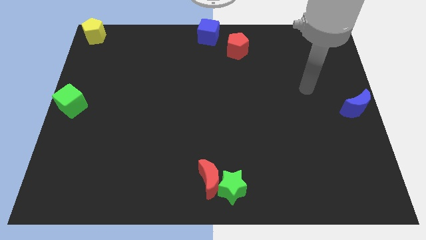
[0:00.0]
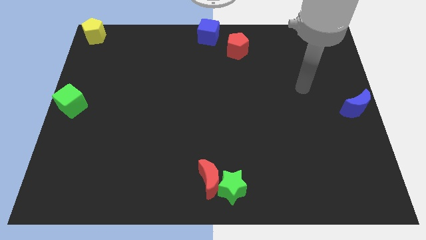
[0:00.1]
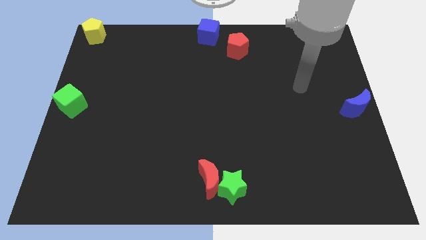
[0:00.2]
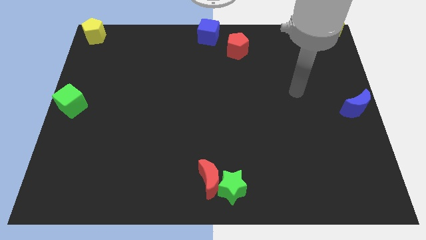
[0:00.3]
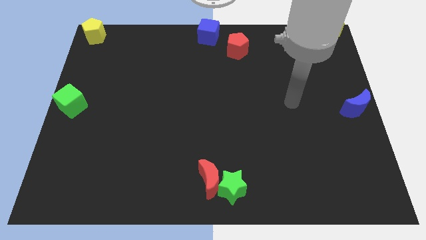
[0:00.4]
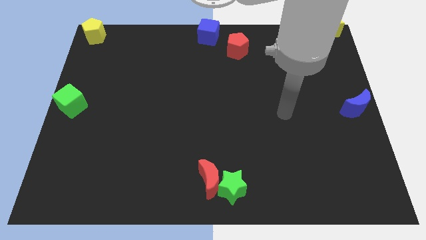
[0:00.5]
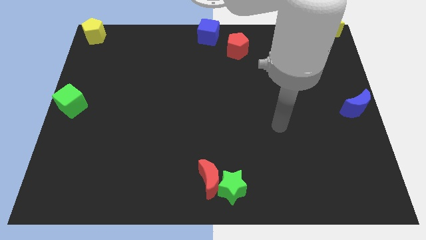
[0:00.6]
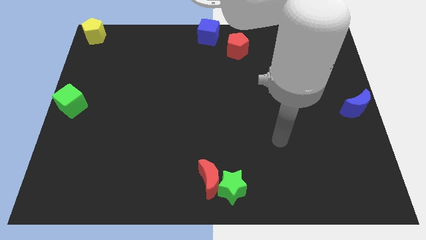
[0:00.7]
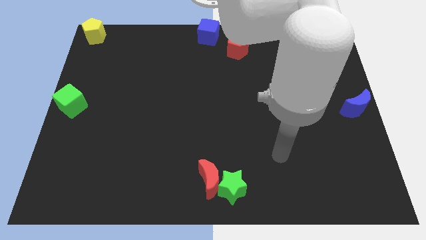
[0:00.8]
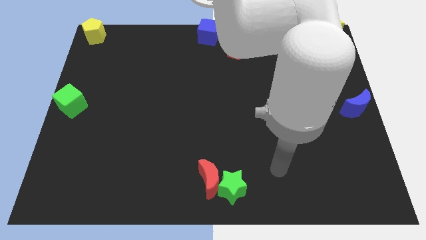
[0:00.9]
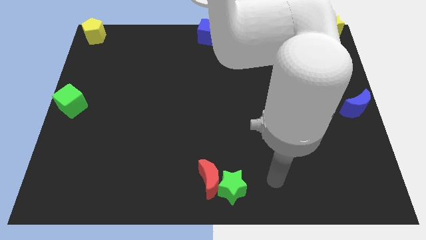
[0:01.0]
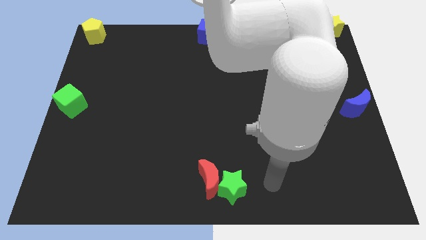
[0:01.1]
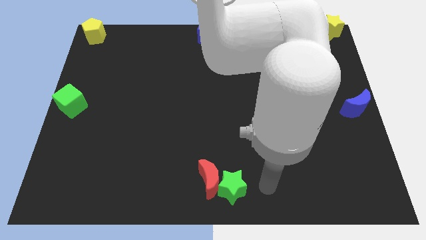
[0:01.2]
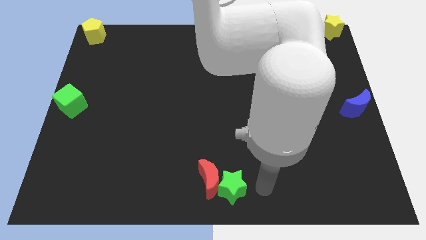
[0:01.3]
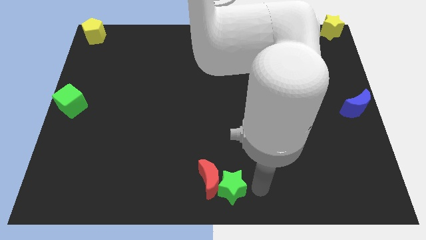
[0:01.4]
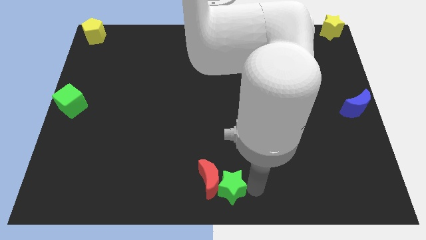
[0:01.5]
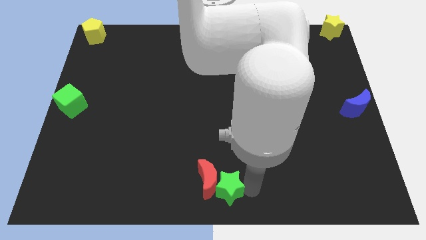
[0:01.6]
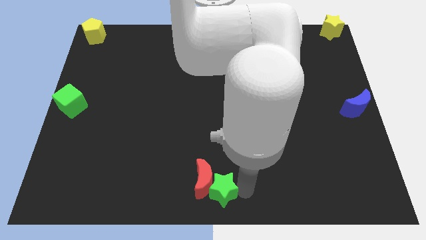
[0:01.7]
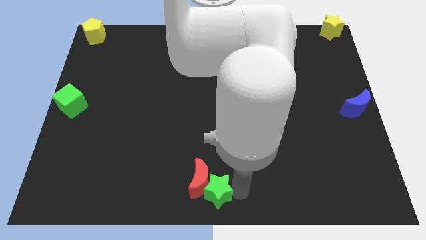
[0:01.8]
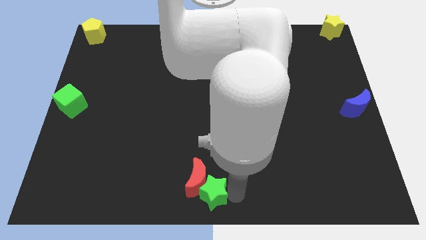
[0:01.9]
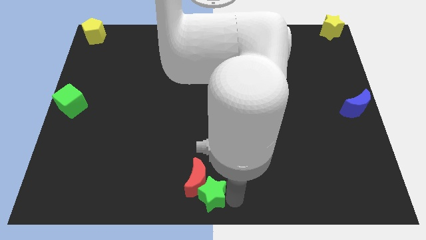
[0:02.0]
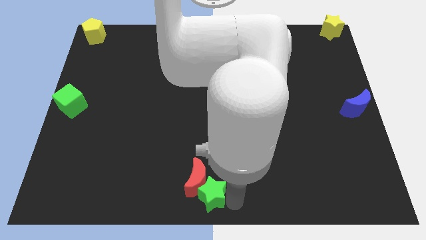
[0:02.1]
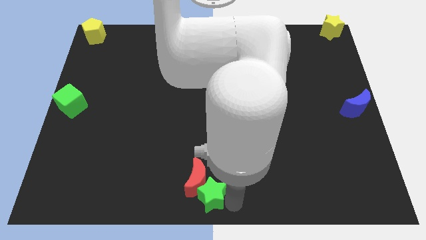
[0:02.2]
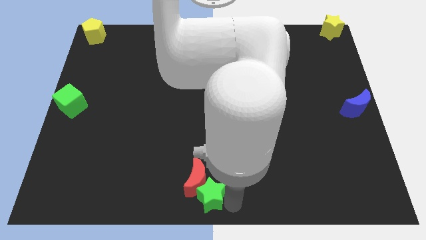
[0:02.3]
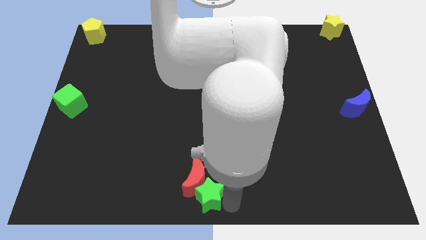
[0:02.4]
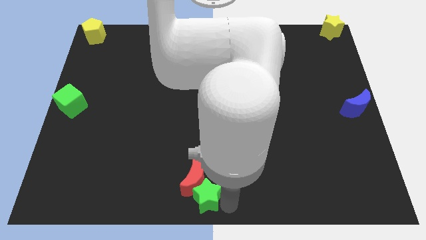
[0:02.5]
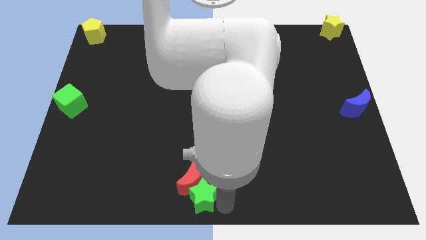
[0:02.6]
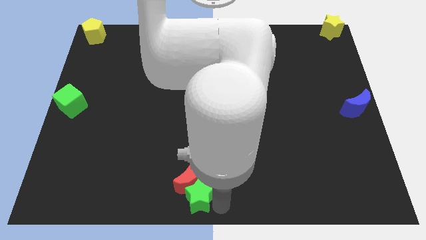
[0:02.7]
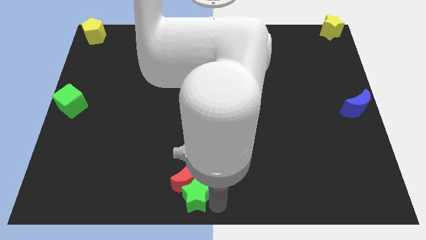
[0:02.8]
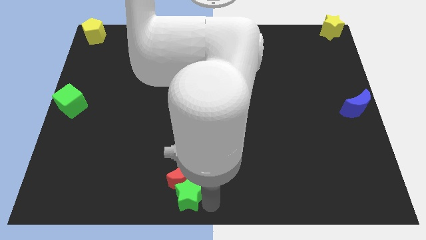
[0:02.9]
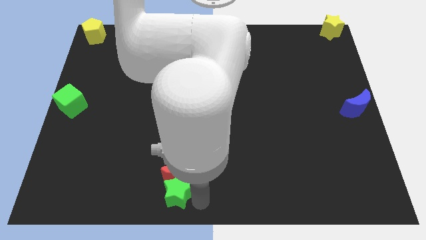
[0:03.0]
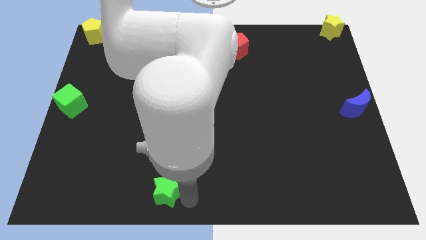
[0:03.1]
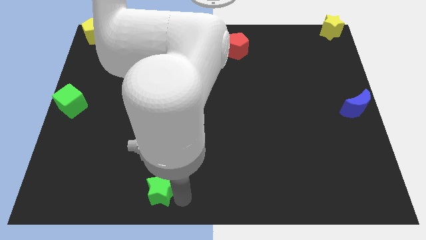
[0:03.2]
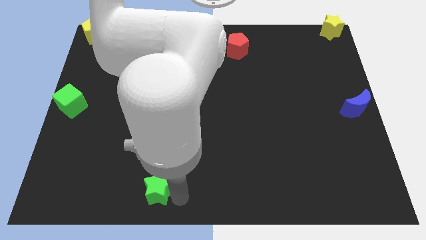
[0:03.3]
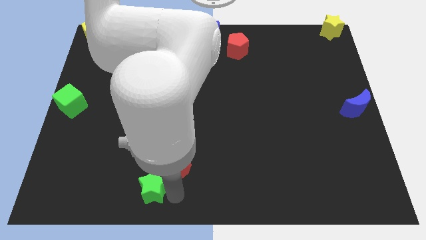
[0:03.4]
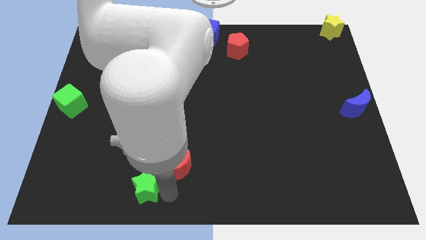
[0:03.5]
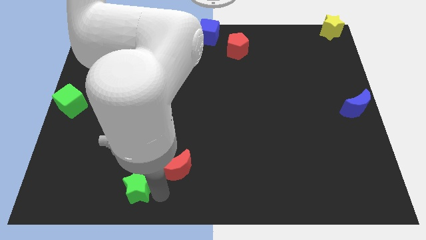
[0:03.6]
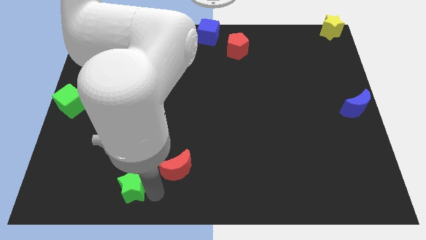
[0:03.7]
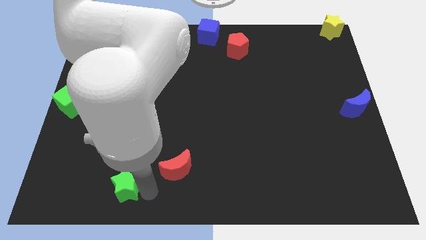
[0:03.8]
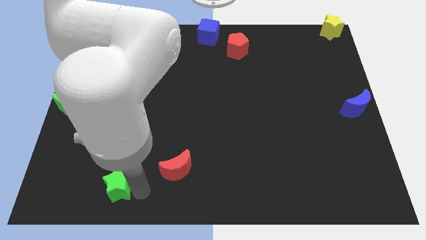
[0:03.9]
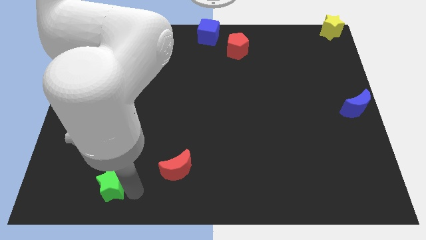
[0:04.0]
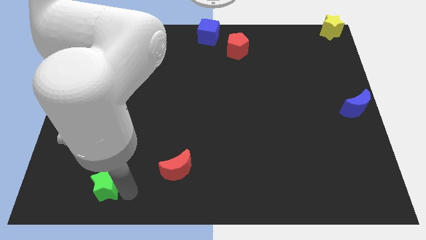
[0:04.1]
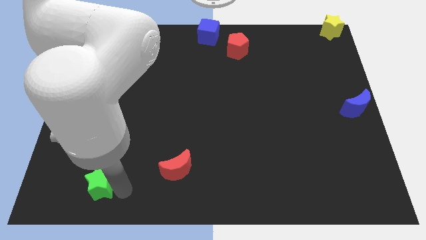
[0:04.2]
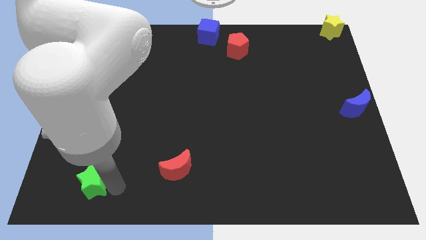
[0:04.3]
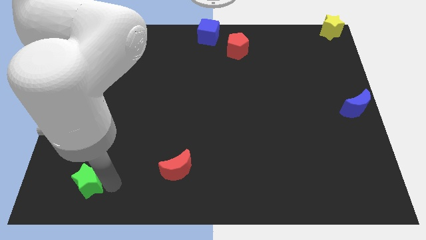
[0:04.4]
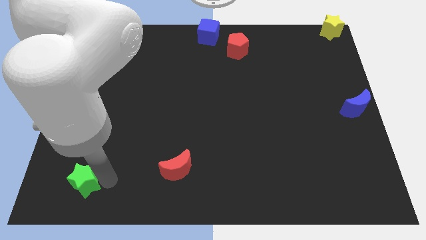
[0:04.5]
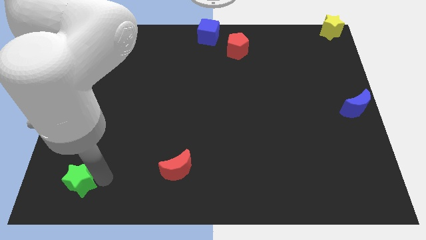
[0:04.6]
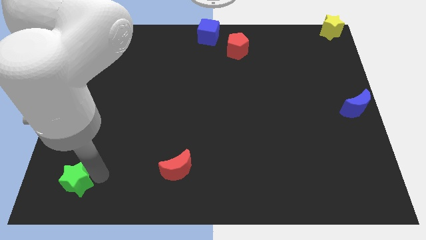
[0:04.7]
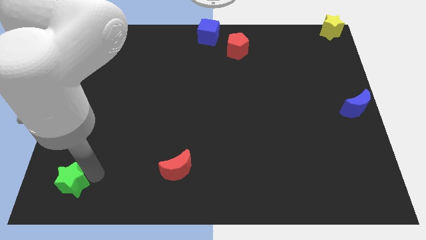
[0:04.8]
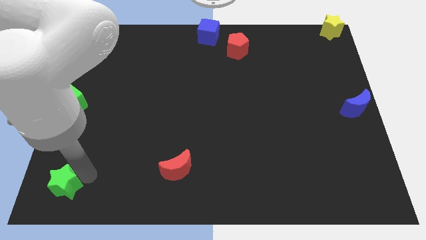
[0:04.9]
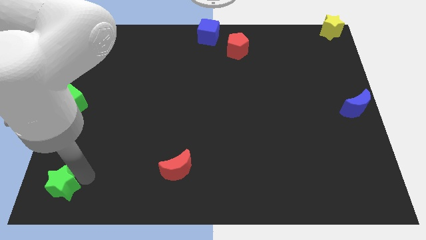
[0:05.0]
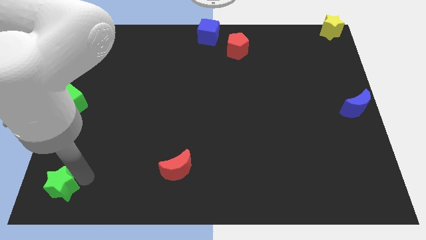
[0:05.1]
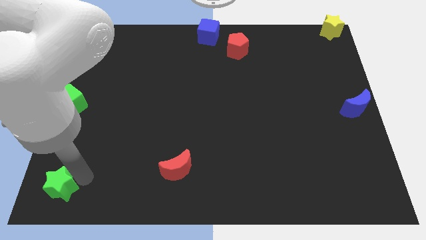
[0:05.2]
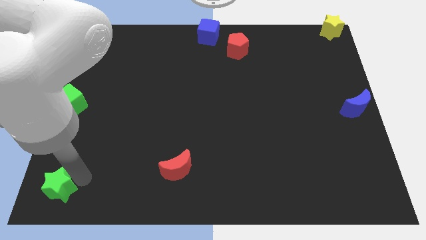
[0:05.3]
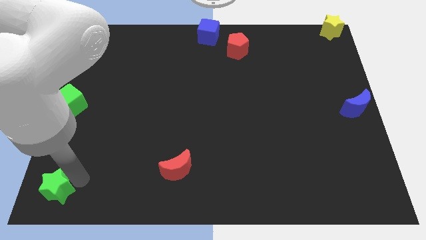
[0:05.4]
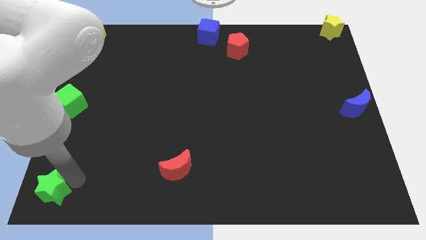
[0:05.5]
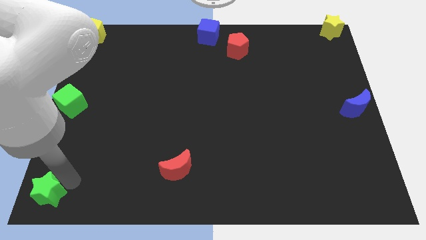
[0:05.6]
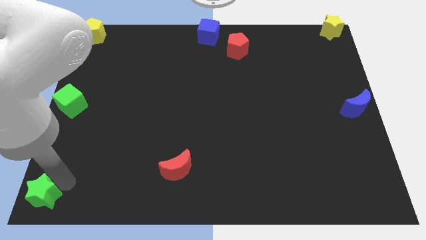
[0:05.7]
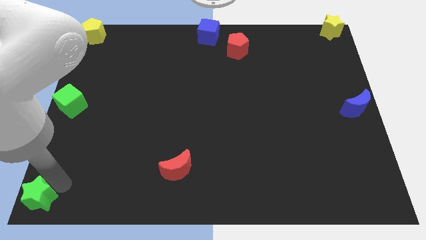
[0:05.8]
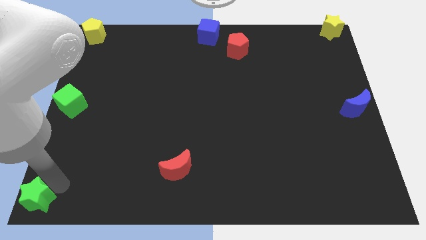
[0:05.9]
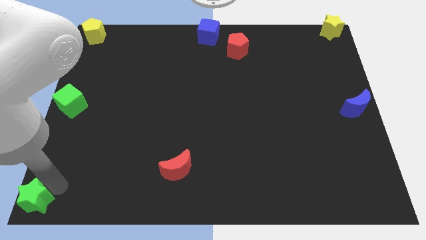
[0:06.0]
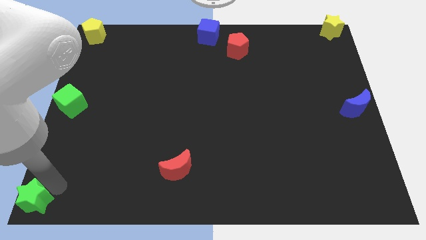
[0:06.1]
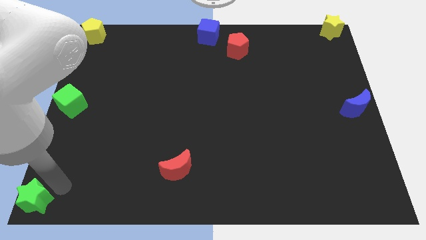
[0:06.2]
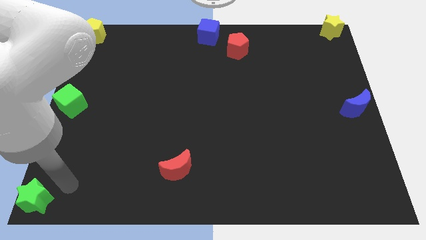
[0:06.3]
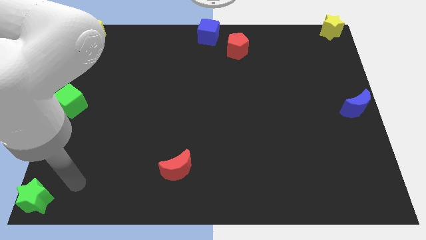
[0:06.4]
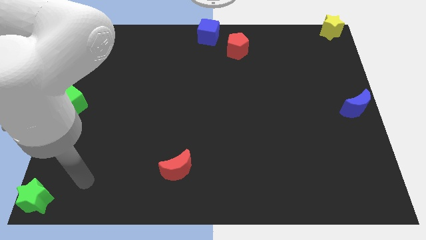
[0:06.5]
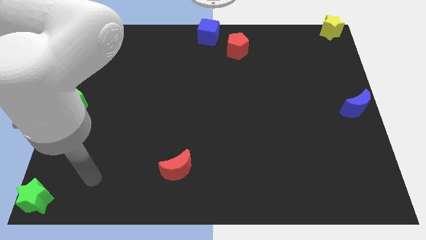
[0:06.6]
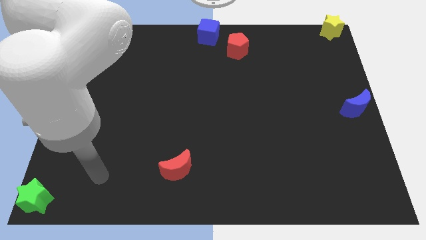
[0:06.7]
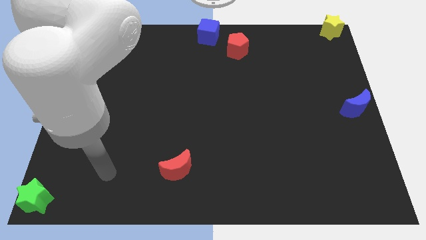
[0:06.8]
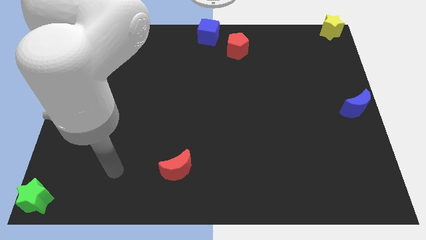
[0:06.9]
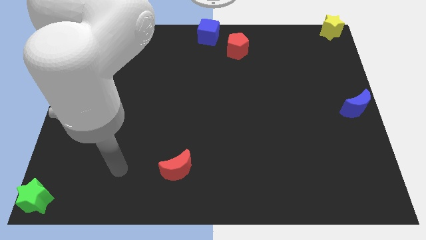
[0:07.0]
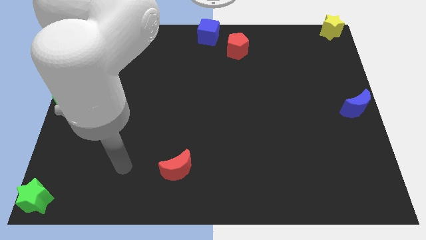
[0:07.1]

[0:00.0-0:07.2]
push the green star towards the bottom left corner of the board

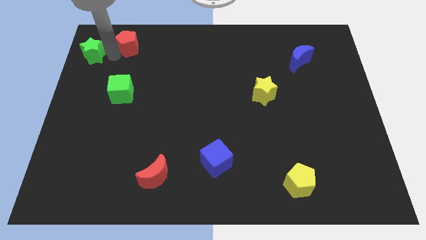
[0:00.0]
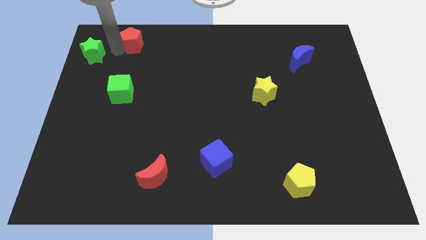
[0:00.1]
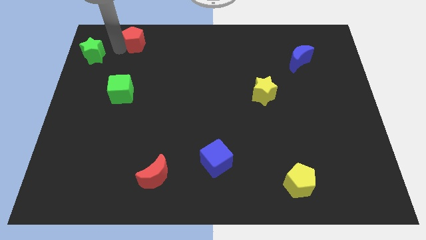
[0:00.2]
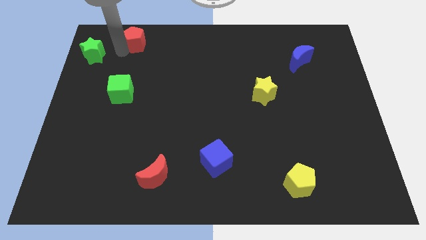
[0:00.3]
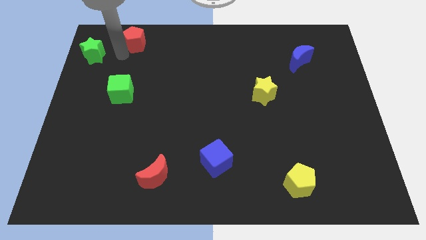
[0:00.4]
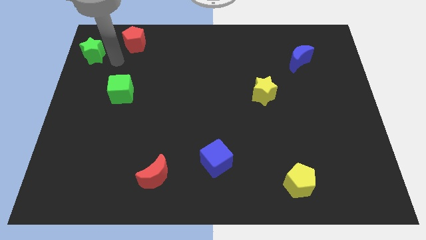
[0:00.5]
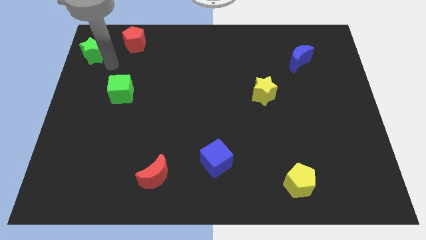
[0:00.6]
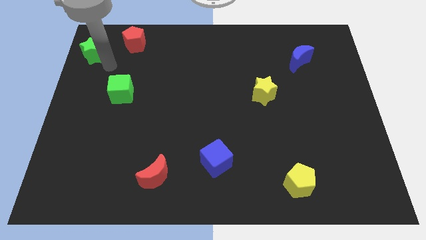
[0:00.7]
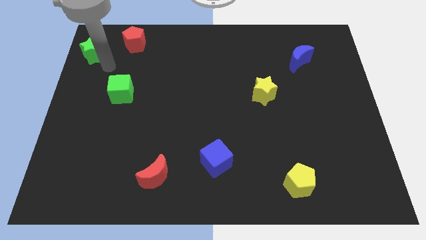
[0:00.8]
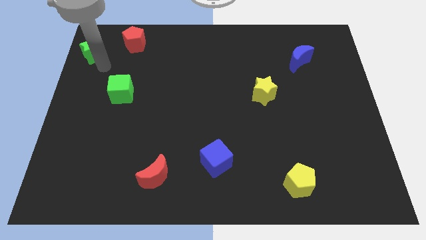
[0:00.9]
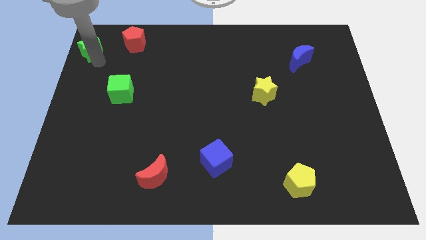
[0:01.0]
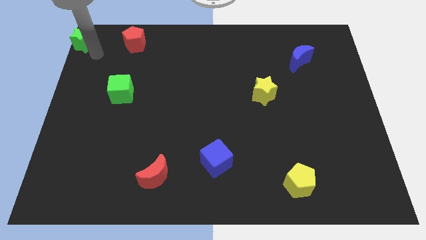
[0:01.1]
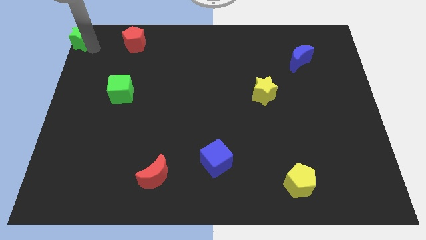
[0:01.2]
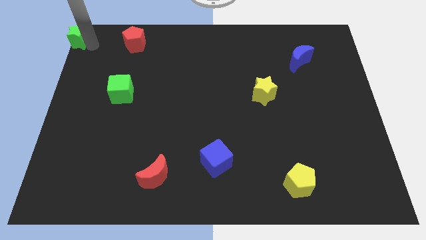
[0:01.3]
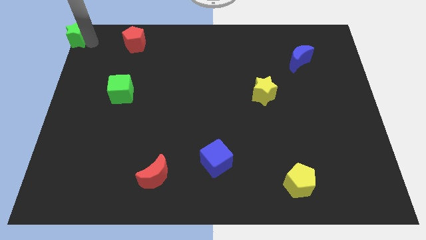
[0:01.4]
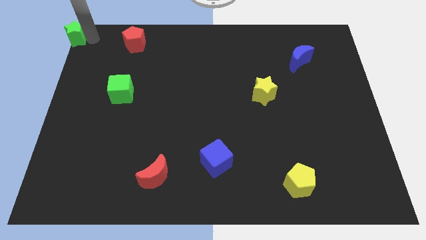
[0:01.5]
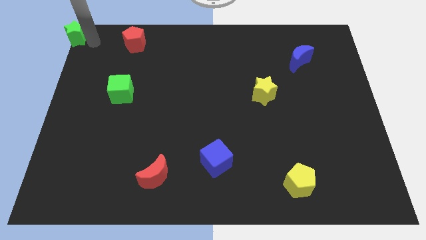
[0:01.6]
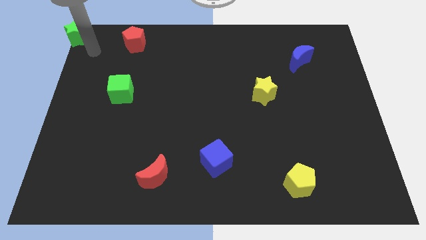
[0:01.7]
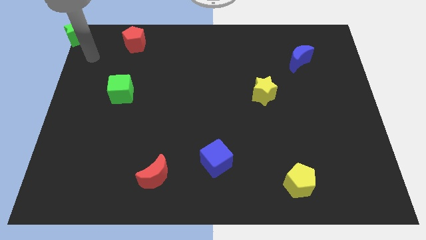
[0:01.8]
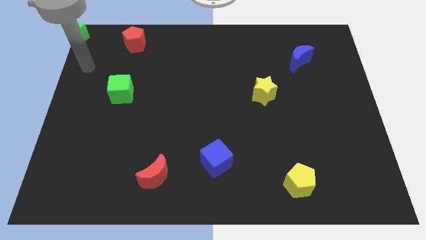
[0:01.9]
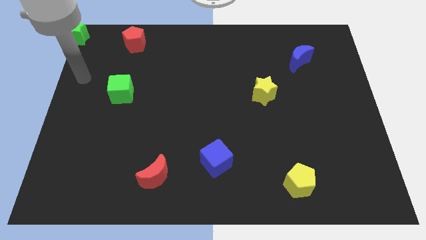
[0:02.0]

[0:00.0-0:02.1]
place the green star at the top left corner of the board
